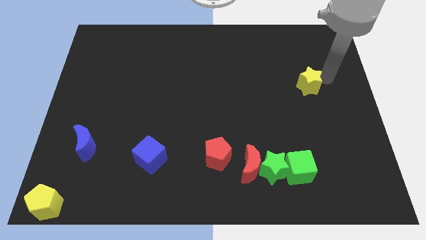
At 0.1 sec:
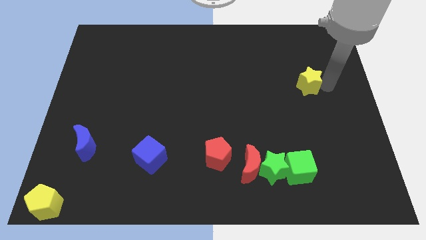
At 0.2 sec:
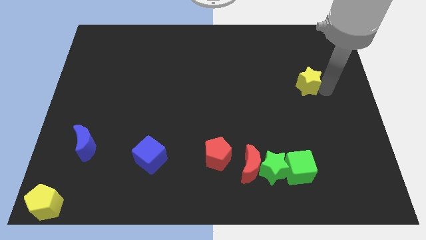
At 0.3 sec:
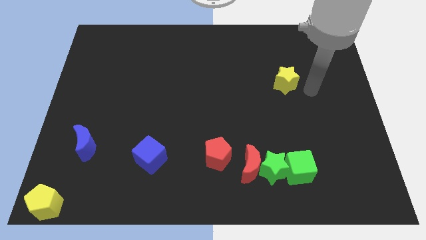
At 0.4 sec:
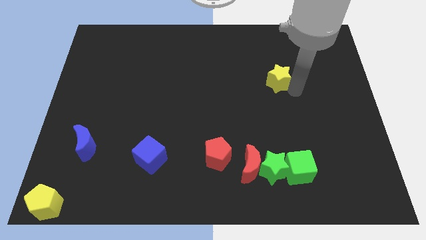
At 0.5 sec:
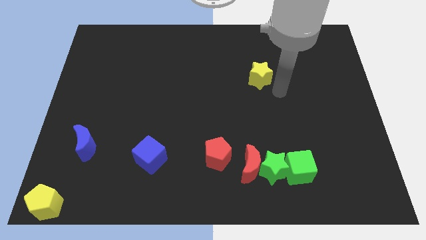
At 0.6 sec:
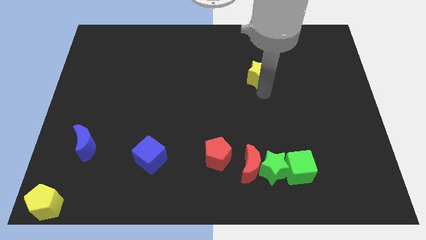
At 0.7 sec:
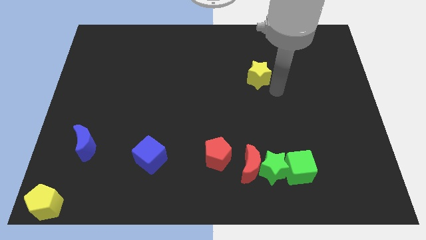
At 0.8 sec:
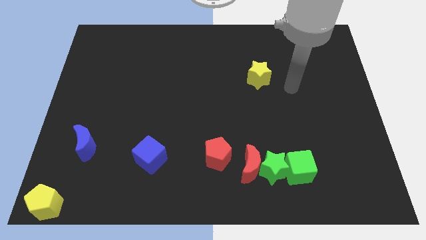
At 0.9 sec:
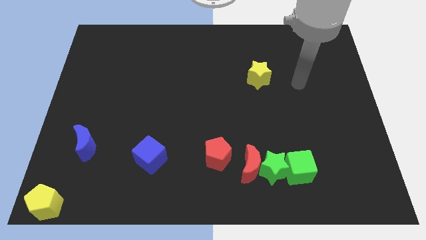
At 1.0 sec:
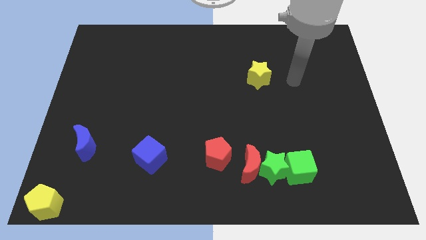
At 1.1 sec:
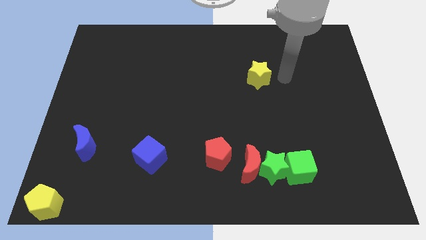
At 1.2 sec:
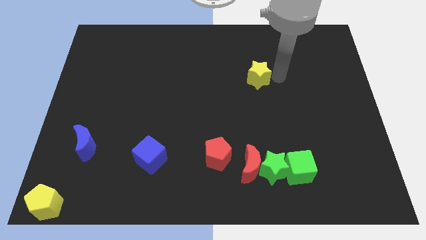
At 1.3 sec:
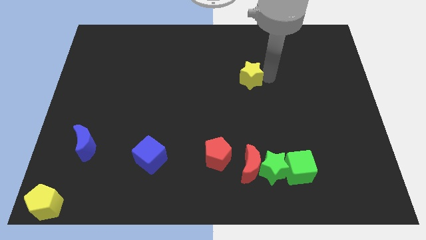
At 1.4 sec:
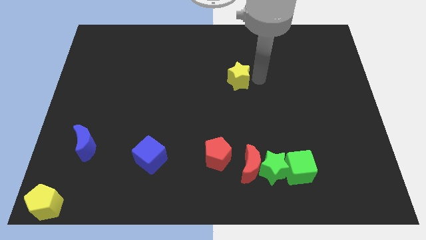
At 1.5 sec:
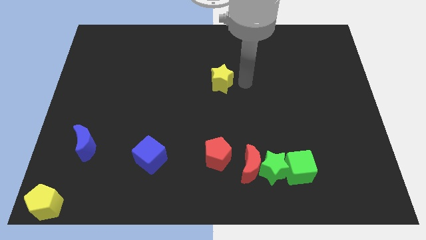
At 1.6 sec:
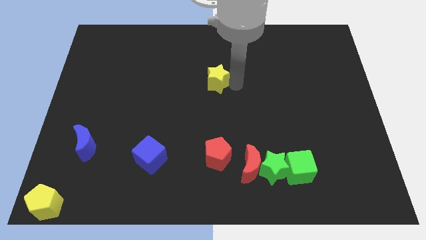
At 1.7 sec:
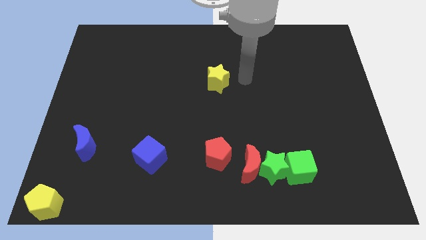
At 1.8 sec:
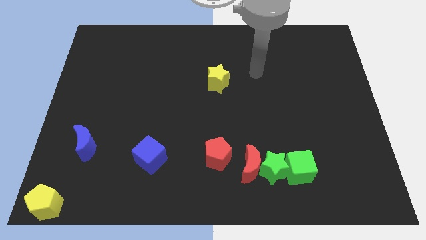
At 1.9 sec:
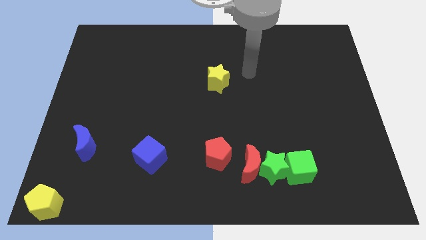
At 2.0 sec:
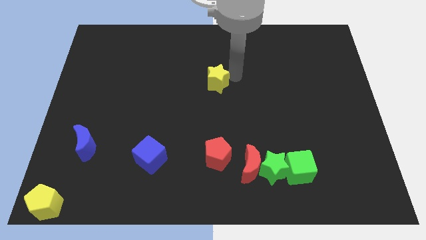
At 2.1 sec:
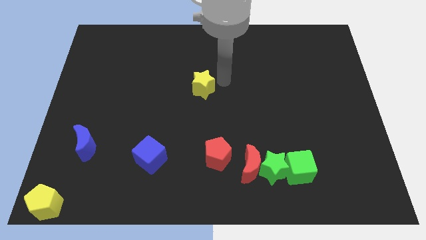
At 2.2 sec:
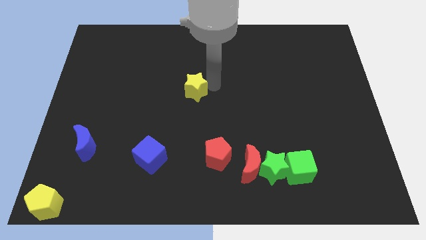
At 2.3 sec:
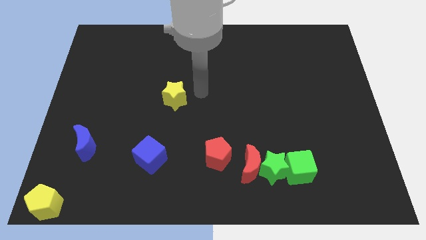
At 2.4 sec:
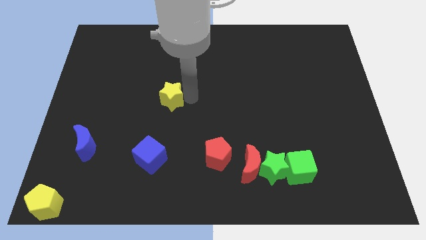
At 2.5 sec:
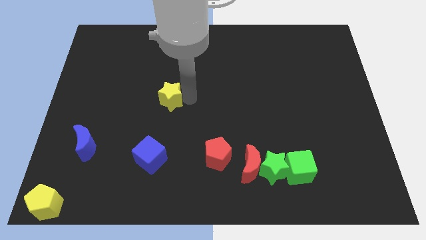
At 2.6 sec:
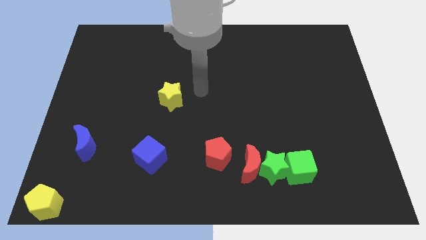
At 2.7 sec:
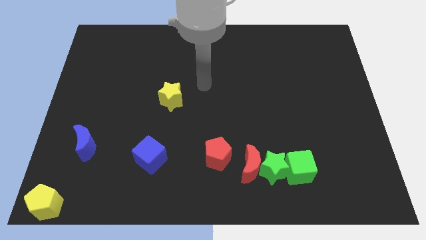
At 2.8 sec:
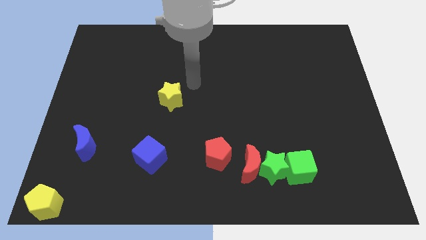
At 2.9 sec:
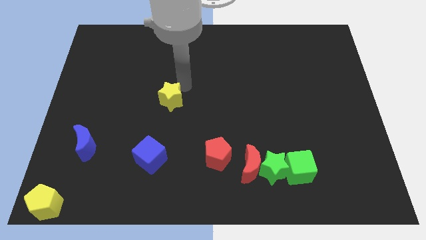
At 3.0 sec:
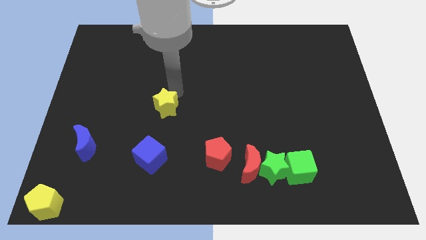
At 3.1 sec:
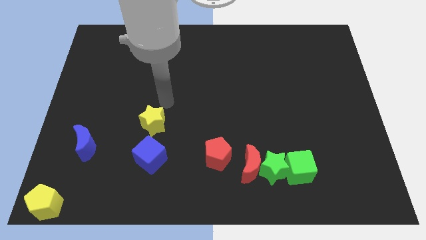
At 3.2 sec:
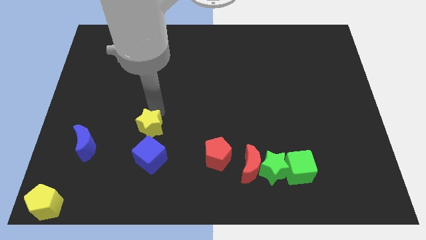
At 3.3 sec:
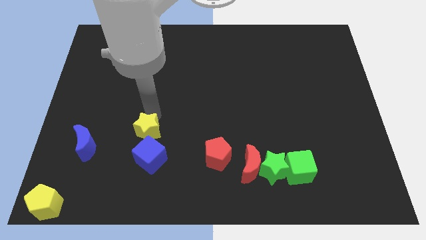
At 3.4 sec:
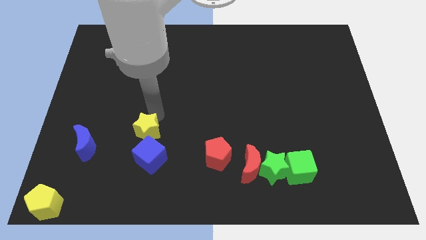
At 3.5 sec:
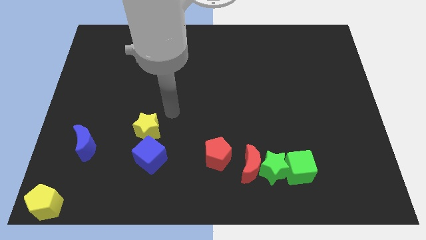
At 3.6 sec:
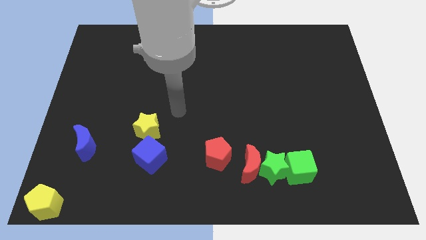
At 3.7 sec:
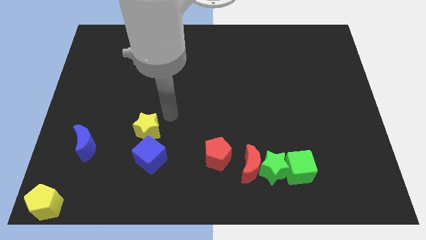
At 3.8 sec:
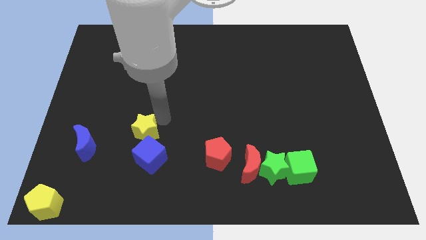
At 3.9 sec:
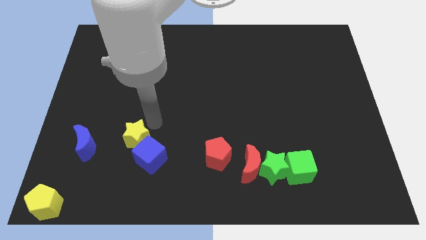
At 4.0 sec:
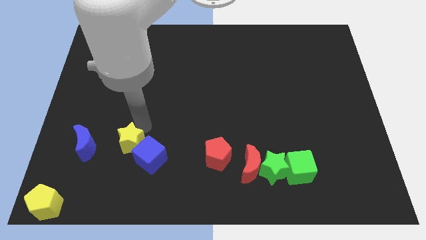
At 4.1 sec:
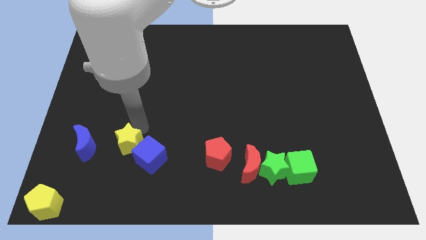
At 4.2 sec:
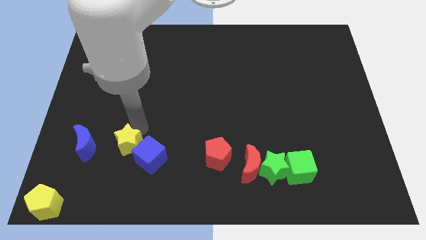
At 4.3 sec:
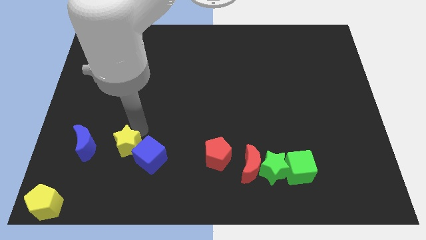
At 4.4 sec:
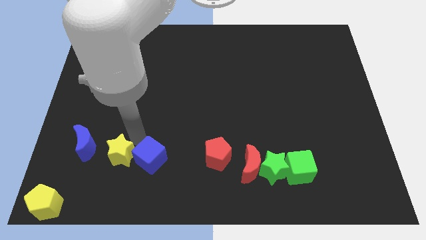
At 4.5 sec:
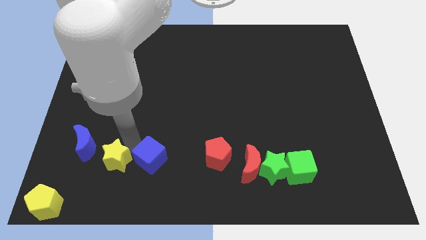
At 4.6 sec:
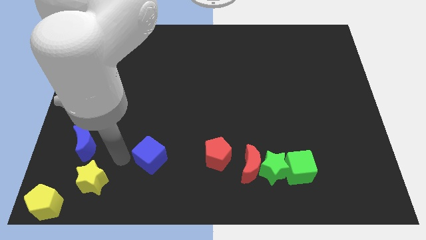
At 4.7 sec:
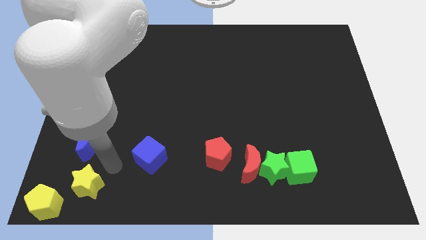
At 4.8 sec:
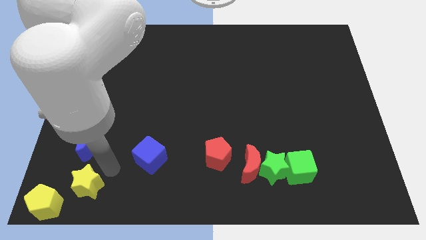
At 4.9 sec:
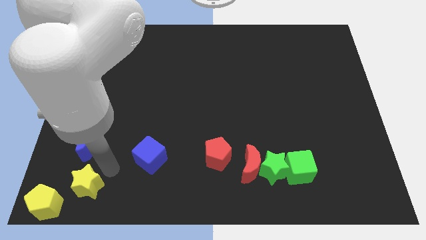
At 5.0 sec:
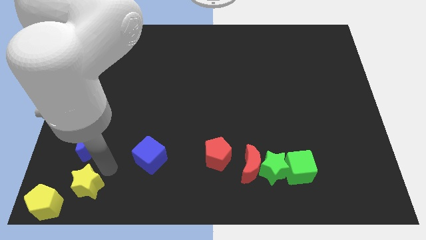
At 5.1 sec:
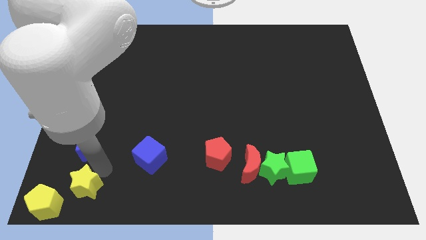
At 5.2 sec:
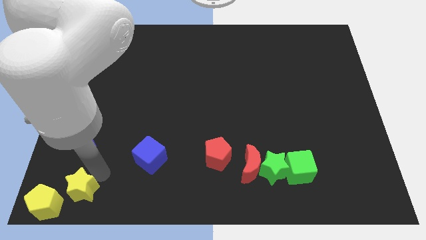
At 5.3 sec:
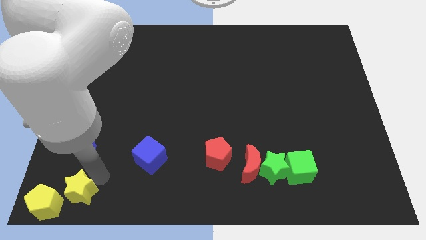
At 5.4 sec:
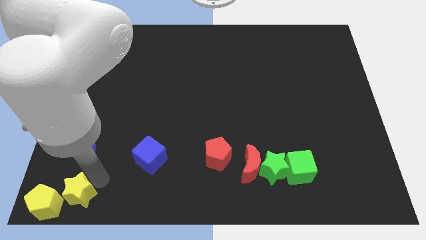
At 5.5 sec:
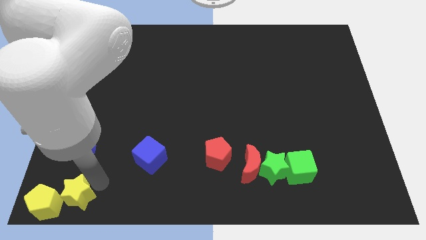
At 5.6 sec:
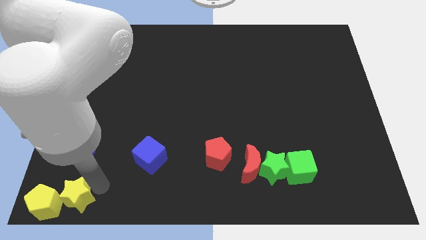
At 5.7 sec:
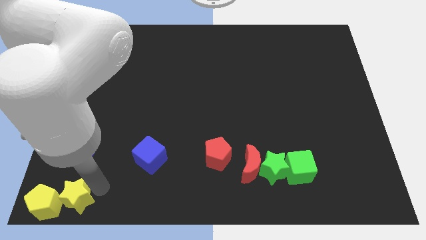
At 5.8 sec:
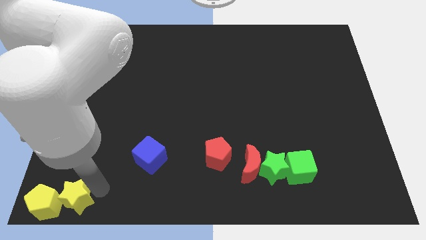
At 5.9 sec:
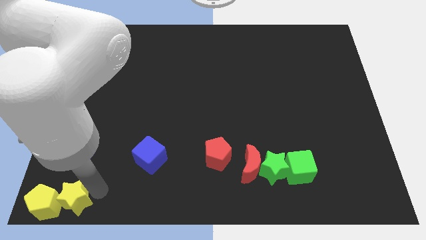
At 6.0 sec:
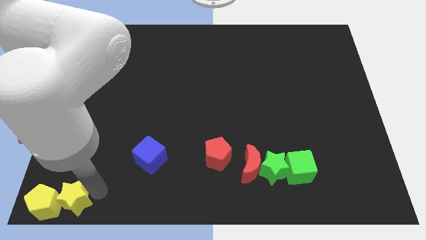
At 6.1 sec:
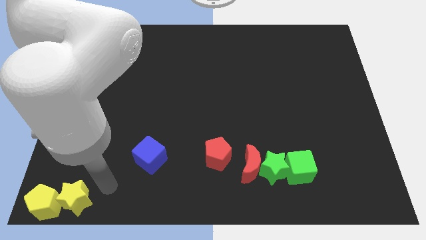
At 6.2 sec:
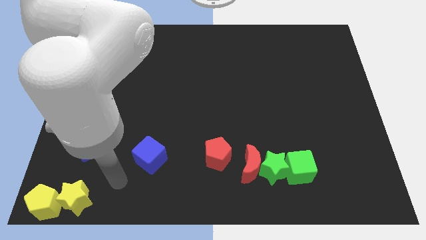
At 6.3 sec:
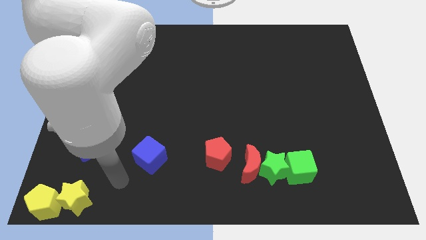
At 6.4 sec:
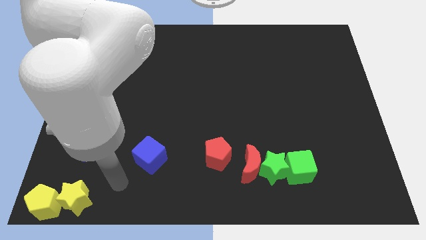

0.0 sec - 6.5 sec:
place the yellow star close to the yellow pentagon

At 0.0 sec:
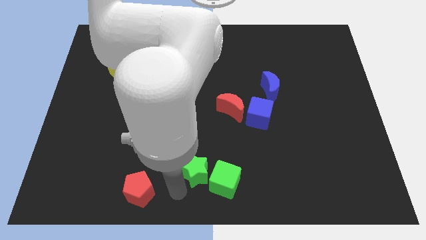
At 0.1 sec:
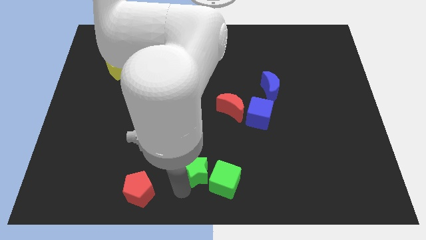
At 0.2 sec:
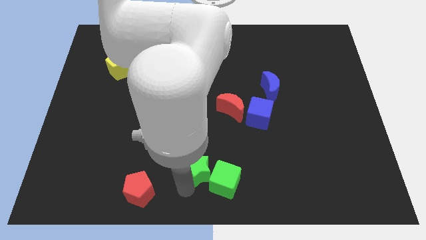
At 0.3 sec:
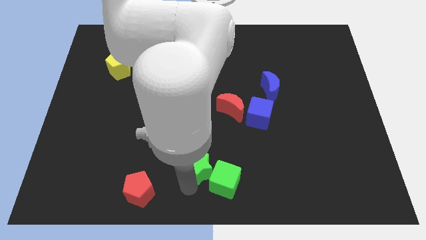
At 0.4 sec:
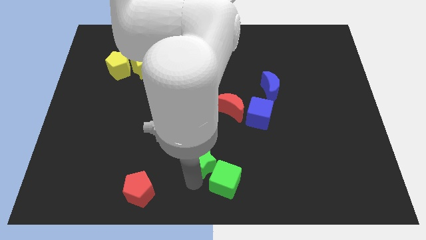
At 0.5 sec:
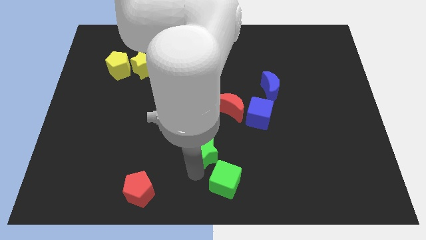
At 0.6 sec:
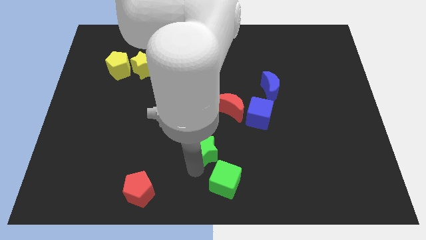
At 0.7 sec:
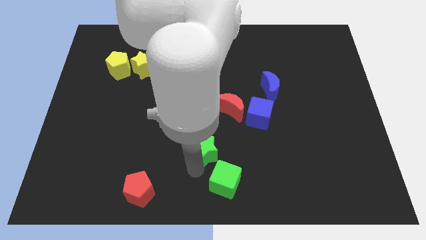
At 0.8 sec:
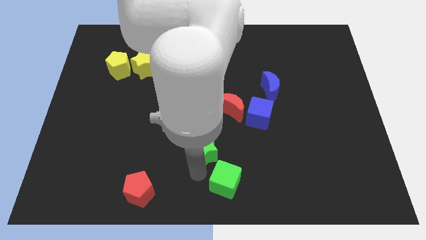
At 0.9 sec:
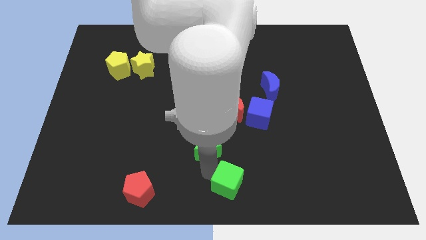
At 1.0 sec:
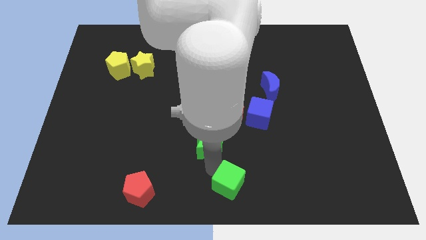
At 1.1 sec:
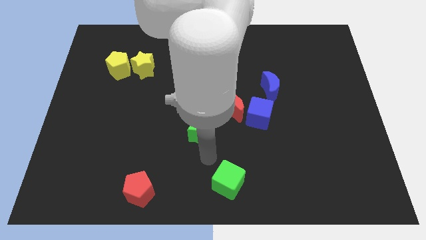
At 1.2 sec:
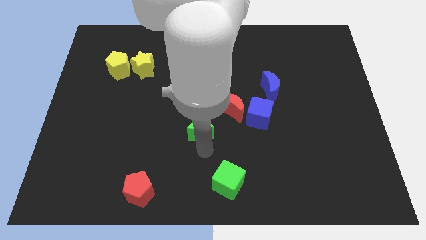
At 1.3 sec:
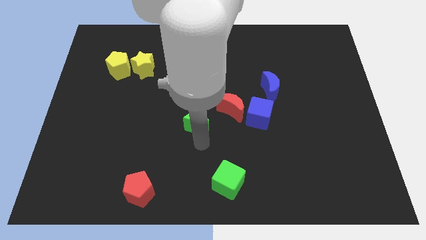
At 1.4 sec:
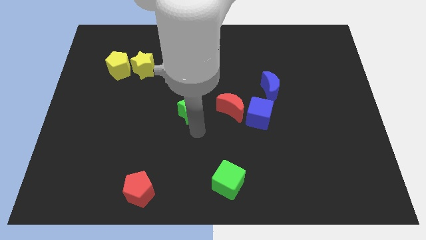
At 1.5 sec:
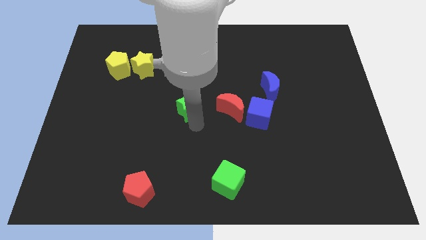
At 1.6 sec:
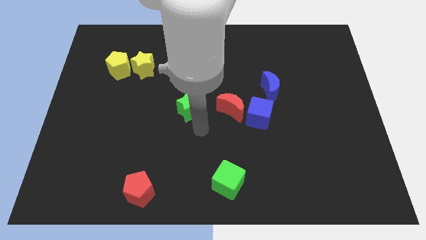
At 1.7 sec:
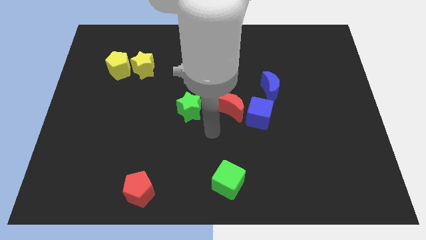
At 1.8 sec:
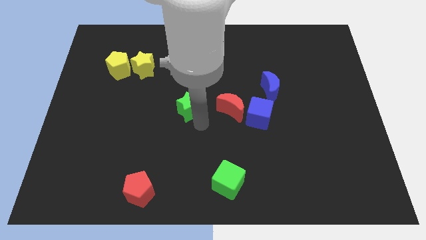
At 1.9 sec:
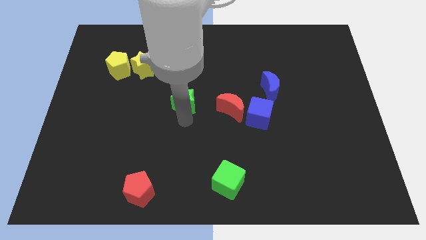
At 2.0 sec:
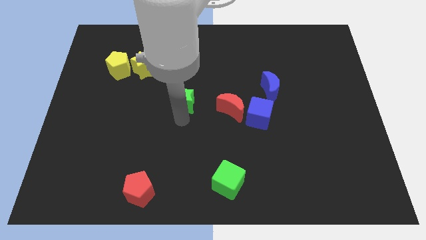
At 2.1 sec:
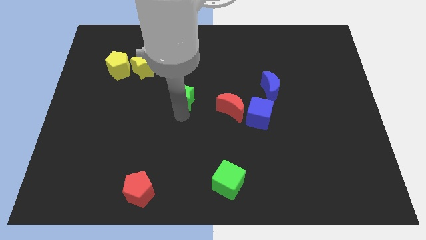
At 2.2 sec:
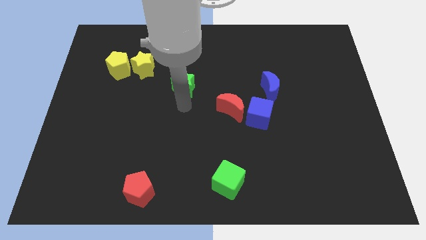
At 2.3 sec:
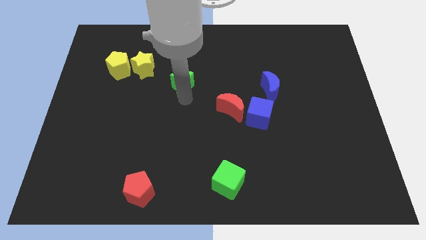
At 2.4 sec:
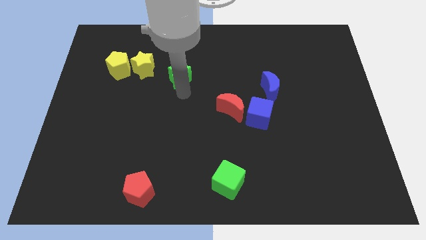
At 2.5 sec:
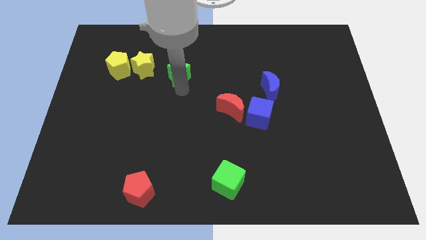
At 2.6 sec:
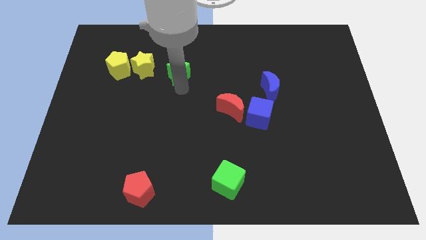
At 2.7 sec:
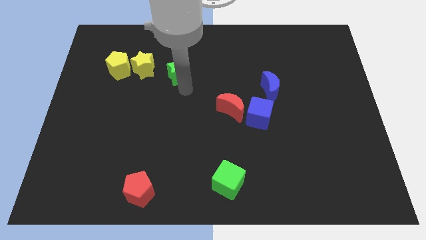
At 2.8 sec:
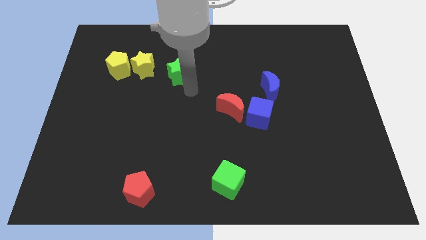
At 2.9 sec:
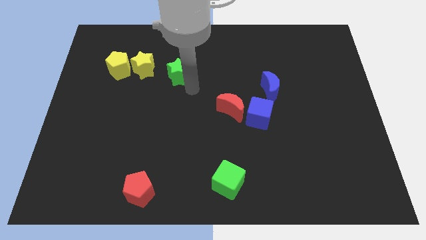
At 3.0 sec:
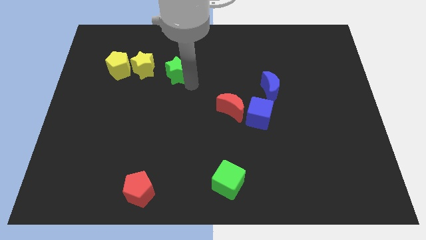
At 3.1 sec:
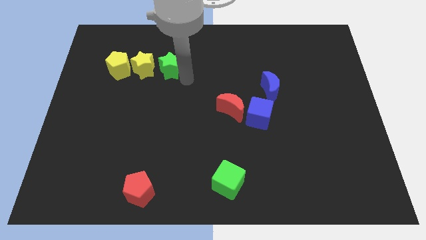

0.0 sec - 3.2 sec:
push the green star to the right of yellow star
